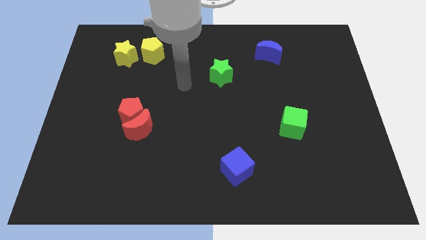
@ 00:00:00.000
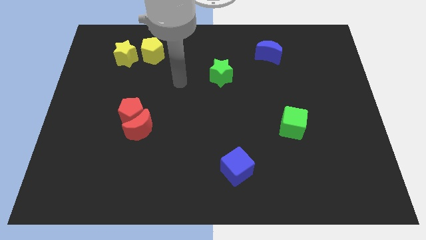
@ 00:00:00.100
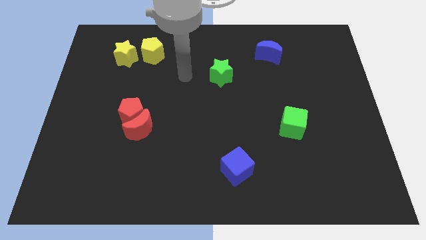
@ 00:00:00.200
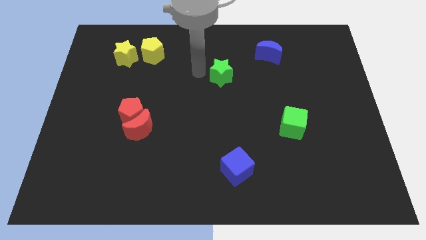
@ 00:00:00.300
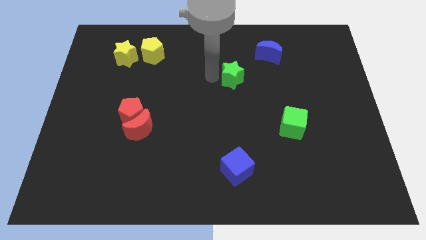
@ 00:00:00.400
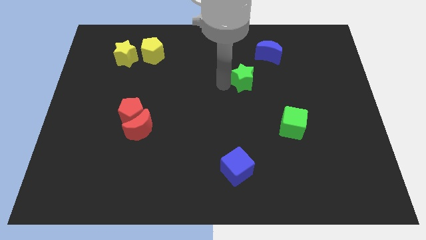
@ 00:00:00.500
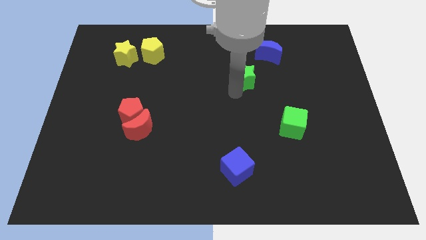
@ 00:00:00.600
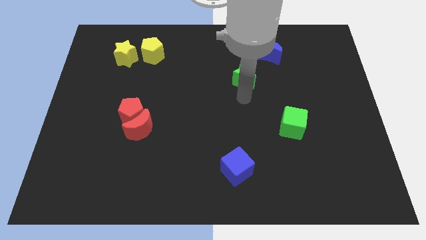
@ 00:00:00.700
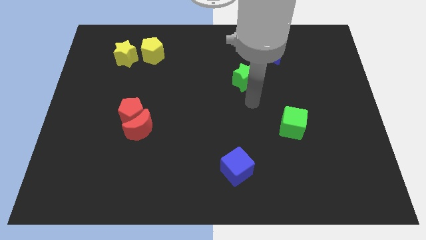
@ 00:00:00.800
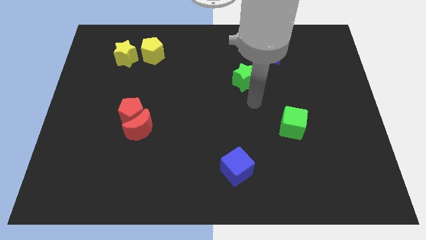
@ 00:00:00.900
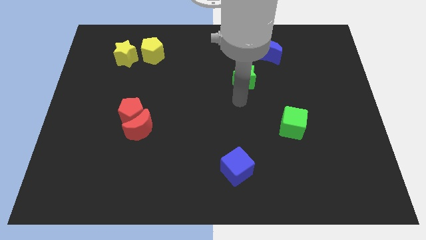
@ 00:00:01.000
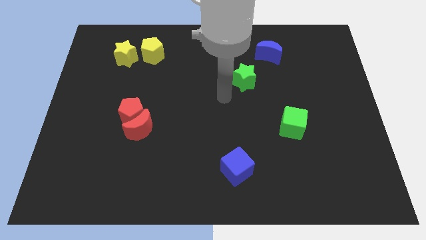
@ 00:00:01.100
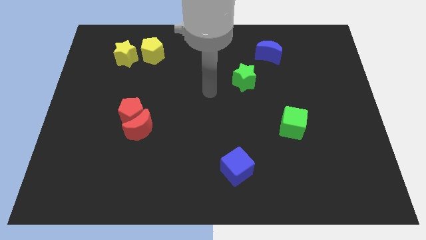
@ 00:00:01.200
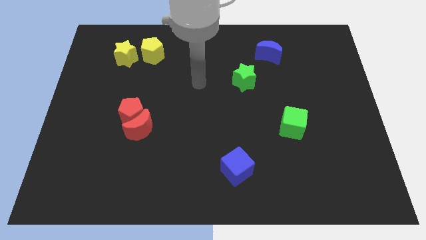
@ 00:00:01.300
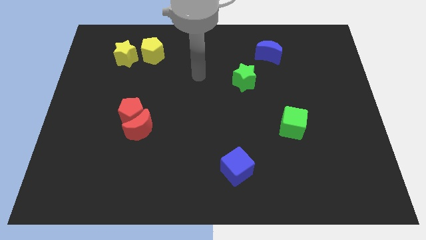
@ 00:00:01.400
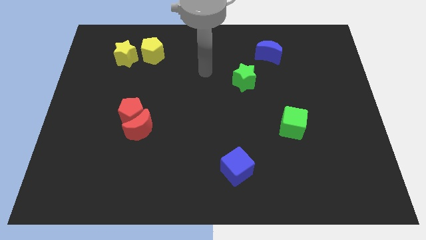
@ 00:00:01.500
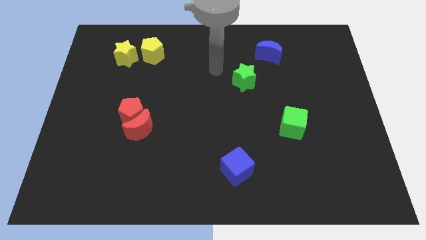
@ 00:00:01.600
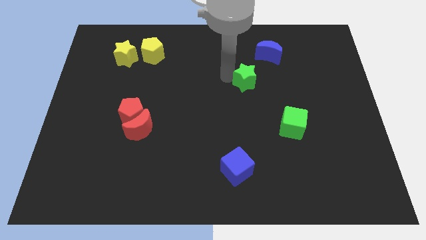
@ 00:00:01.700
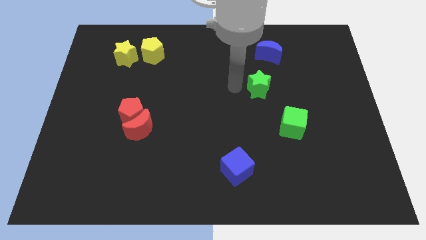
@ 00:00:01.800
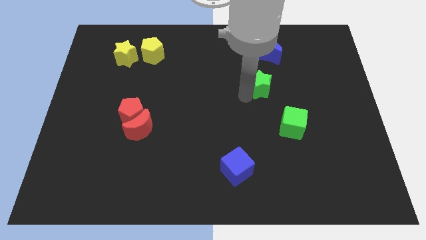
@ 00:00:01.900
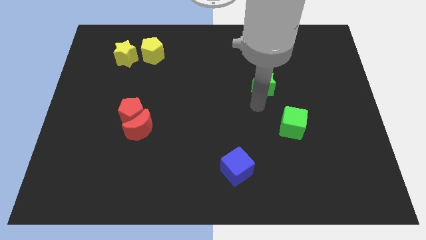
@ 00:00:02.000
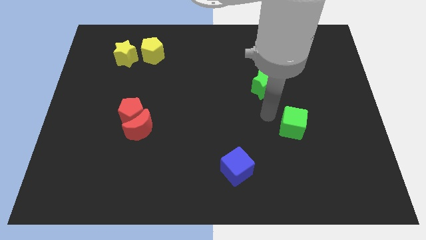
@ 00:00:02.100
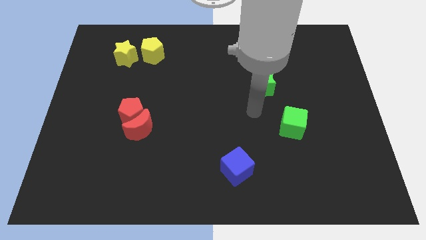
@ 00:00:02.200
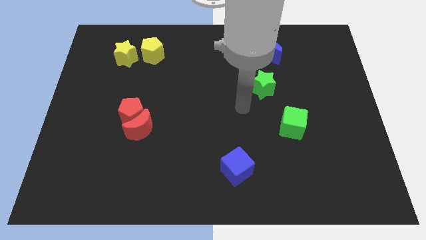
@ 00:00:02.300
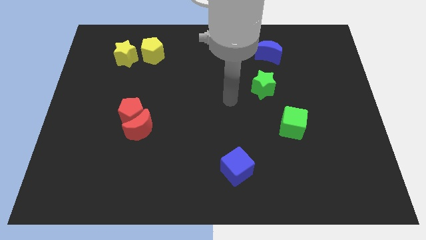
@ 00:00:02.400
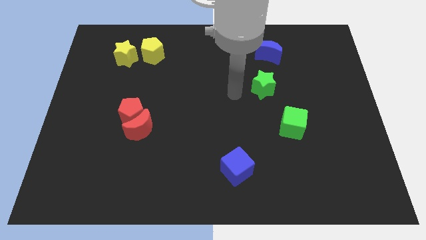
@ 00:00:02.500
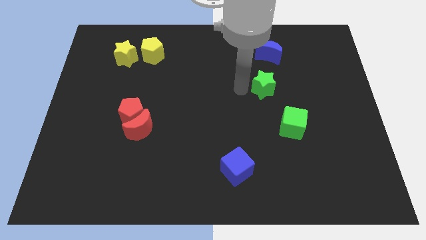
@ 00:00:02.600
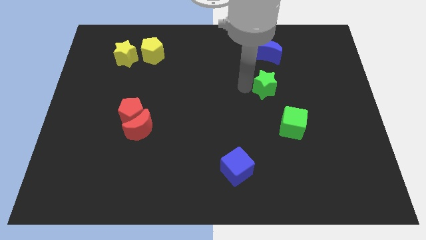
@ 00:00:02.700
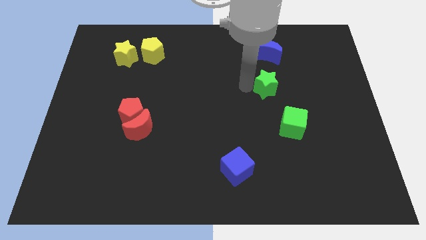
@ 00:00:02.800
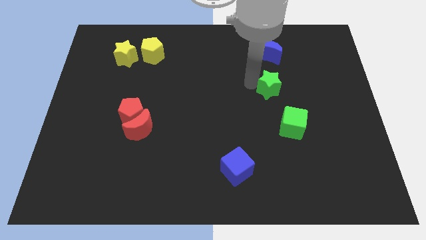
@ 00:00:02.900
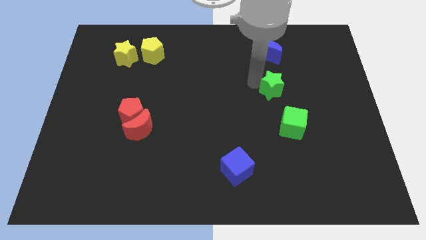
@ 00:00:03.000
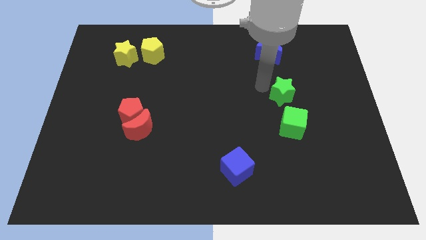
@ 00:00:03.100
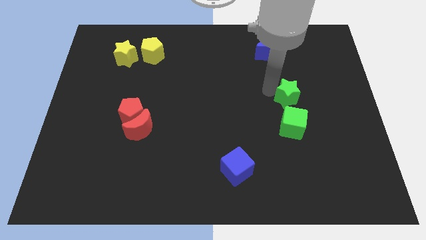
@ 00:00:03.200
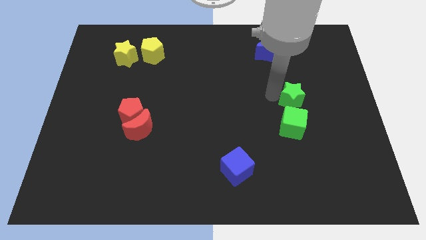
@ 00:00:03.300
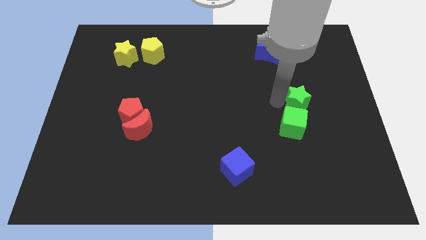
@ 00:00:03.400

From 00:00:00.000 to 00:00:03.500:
put the green star on the top of green cube

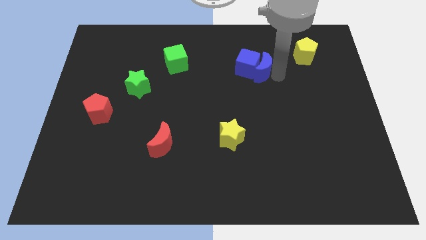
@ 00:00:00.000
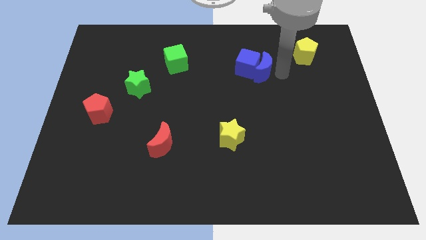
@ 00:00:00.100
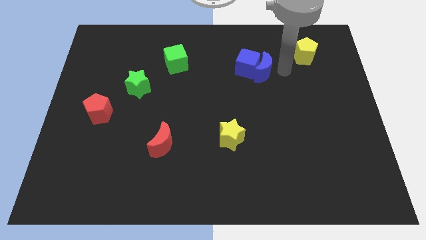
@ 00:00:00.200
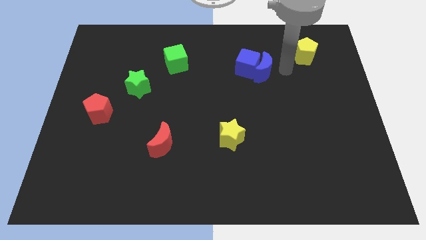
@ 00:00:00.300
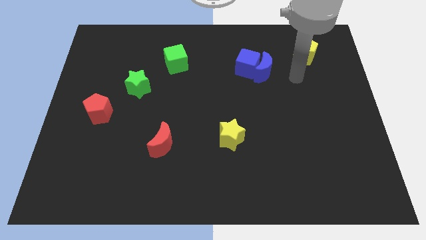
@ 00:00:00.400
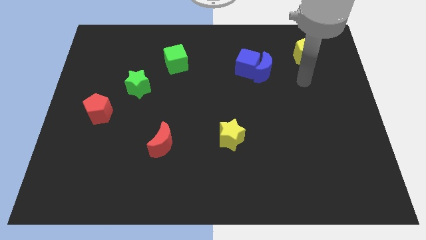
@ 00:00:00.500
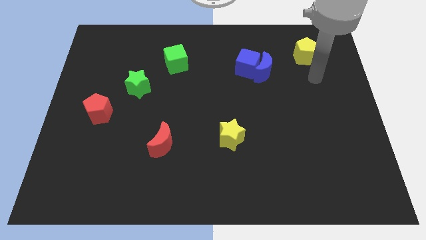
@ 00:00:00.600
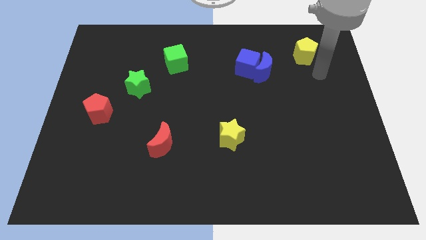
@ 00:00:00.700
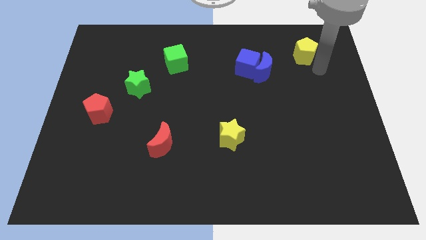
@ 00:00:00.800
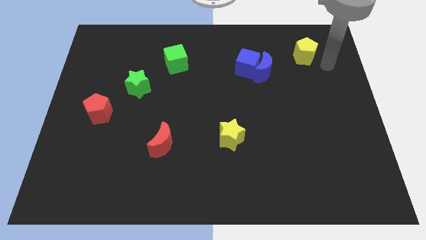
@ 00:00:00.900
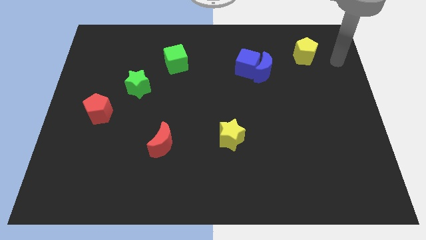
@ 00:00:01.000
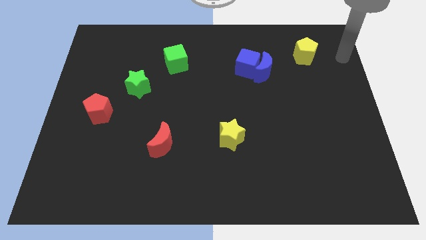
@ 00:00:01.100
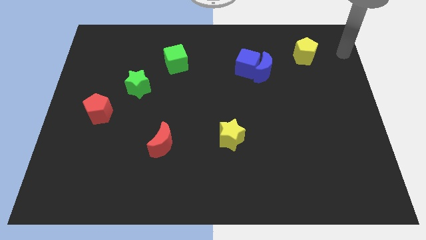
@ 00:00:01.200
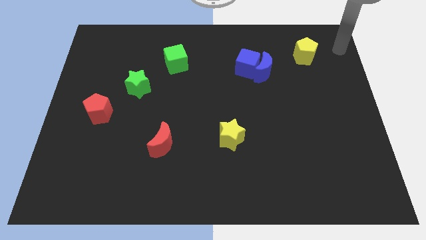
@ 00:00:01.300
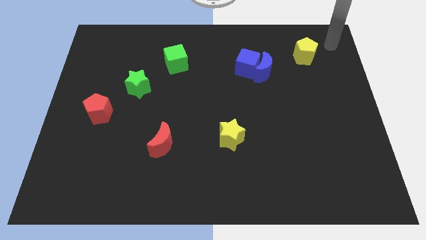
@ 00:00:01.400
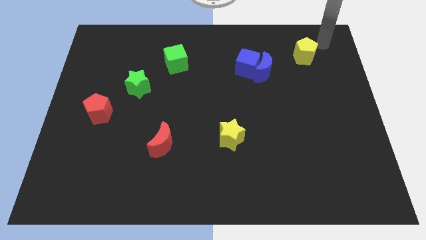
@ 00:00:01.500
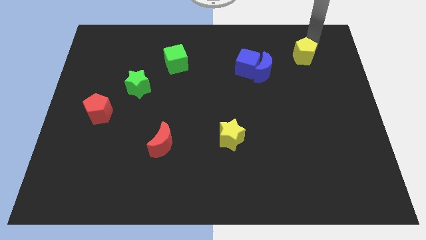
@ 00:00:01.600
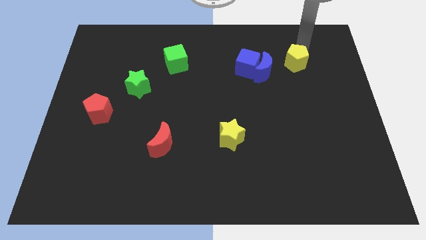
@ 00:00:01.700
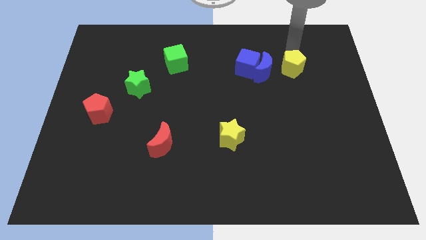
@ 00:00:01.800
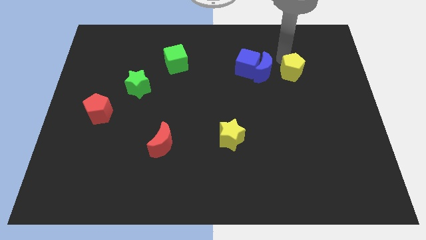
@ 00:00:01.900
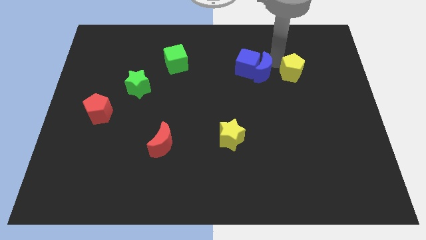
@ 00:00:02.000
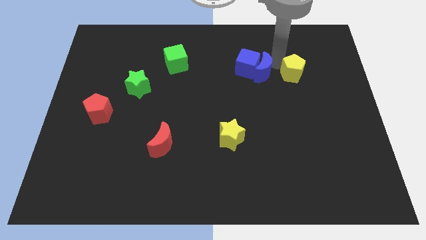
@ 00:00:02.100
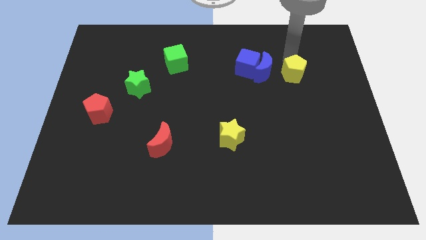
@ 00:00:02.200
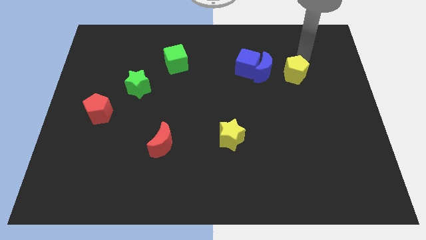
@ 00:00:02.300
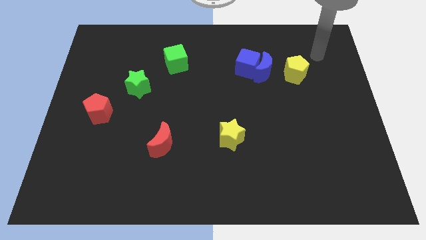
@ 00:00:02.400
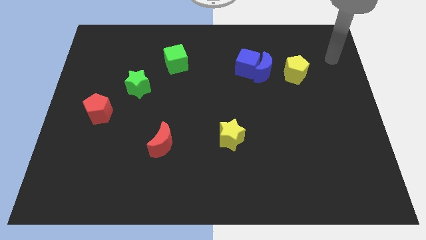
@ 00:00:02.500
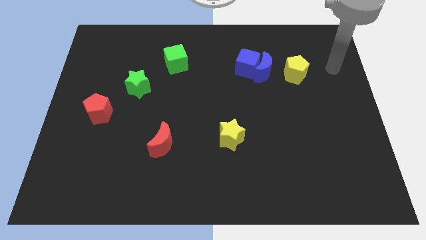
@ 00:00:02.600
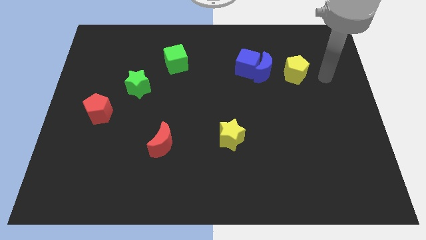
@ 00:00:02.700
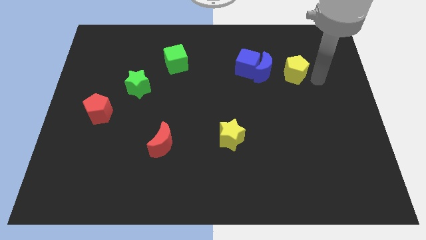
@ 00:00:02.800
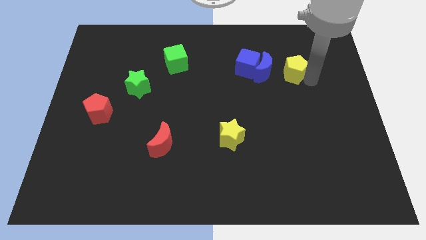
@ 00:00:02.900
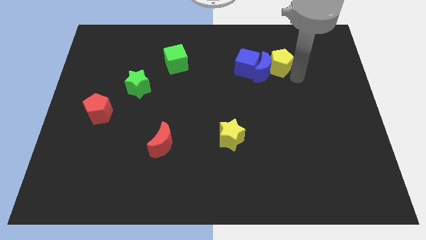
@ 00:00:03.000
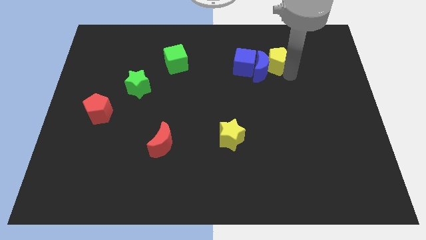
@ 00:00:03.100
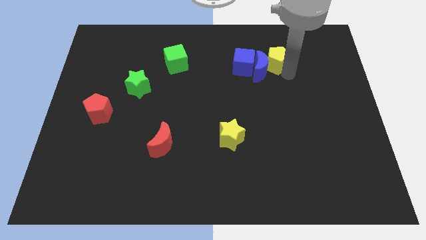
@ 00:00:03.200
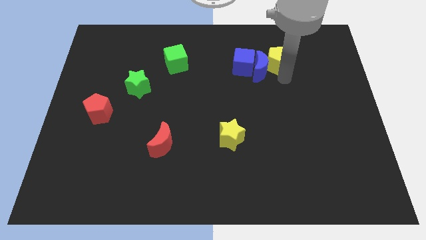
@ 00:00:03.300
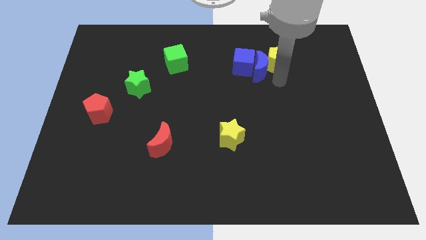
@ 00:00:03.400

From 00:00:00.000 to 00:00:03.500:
push the yellow pentagon to the right side of blue moon

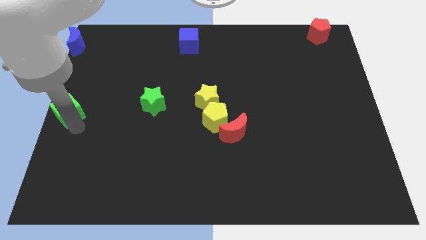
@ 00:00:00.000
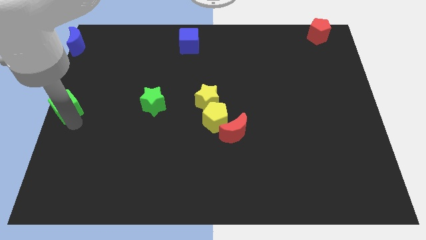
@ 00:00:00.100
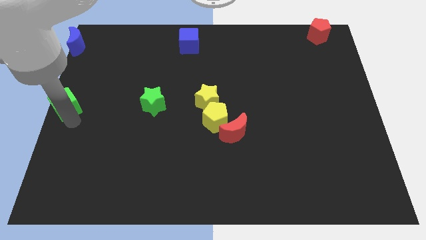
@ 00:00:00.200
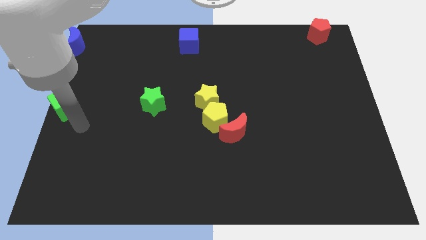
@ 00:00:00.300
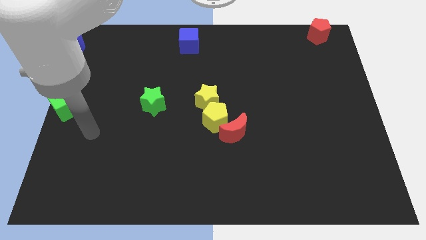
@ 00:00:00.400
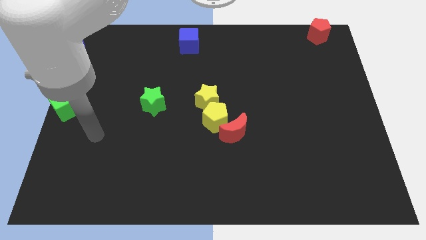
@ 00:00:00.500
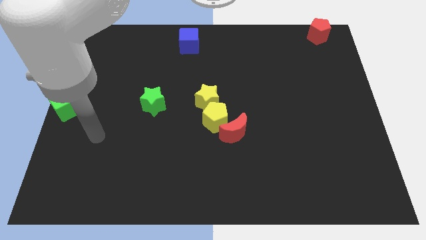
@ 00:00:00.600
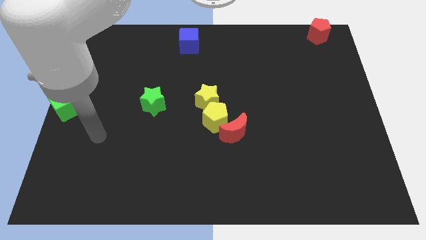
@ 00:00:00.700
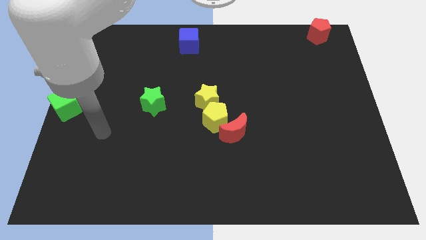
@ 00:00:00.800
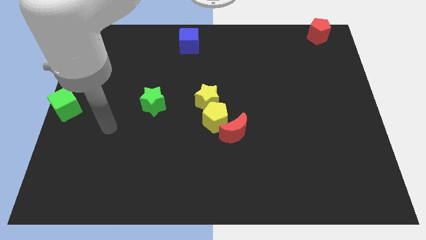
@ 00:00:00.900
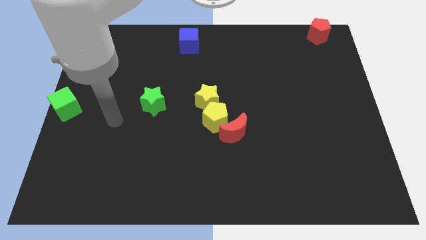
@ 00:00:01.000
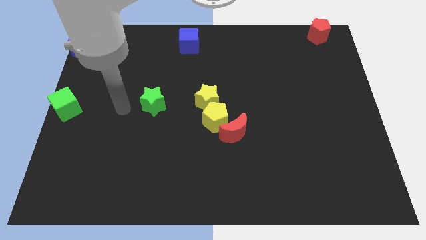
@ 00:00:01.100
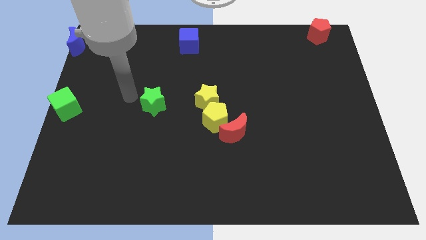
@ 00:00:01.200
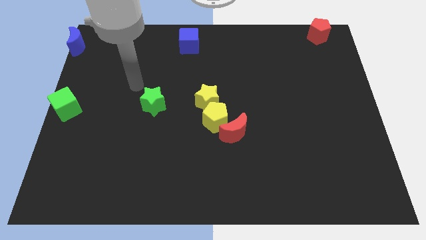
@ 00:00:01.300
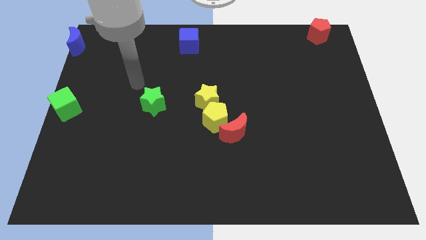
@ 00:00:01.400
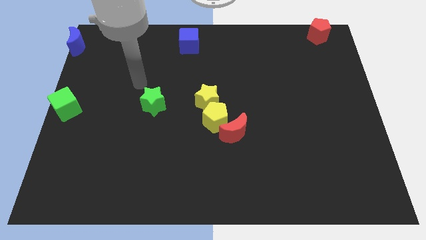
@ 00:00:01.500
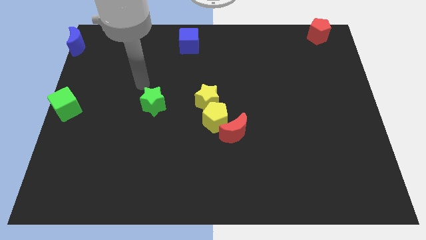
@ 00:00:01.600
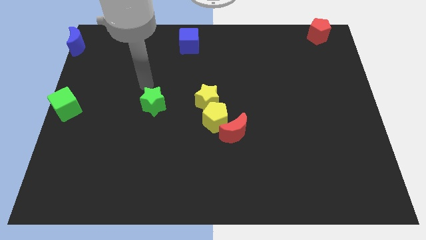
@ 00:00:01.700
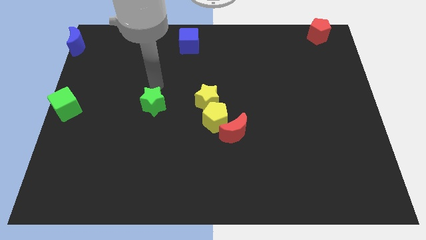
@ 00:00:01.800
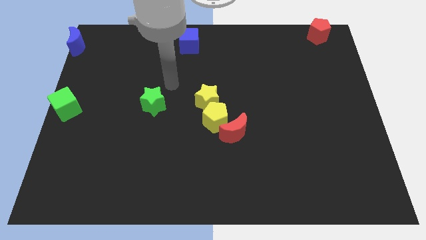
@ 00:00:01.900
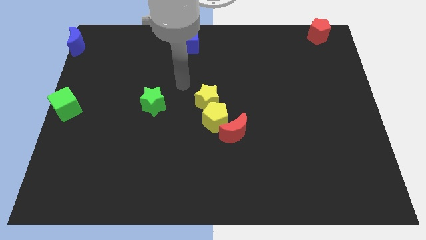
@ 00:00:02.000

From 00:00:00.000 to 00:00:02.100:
move the arm on the diagonal to the yellow star
